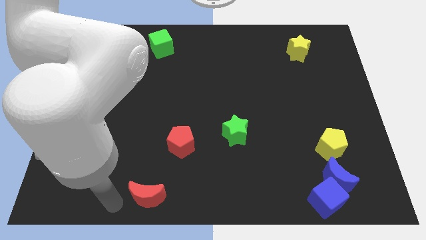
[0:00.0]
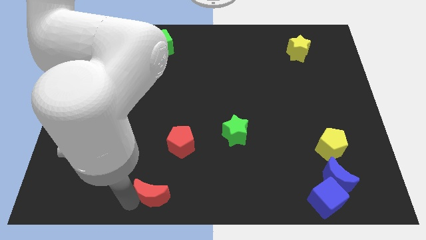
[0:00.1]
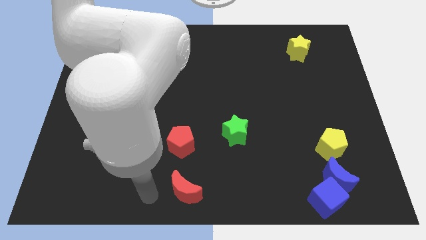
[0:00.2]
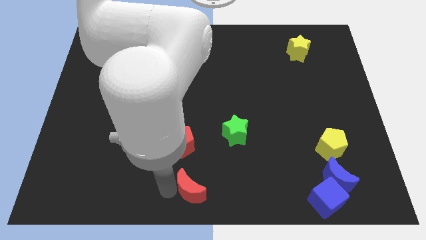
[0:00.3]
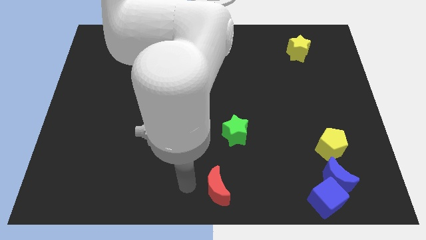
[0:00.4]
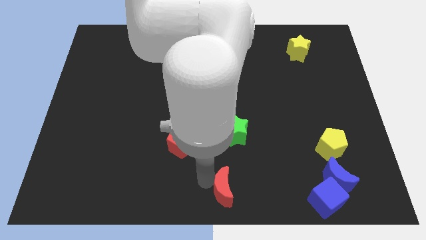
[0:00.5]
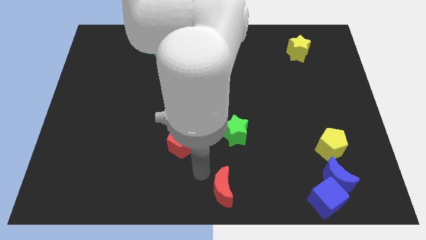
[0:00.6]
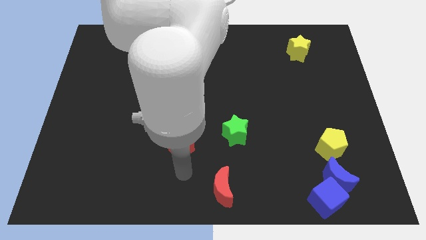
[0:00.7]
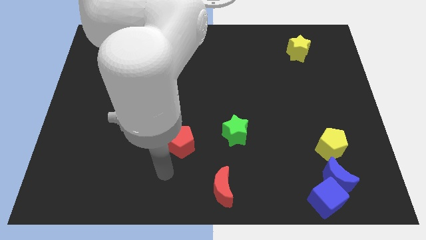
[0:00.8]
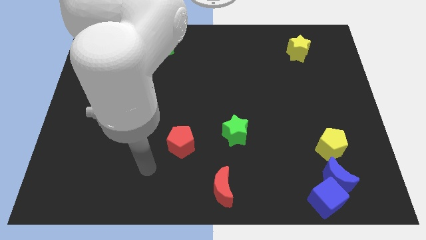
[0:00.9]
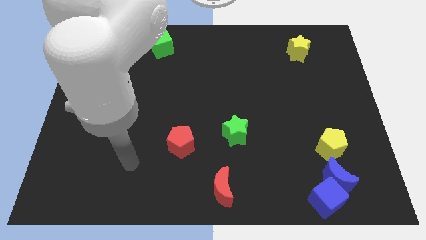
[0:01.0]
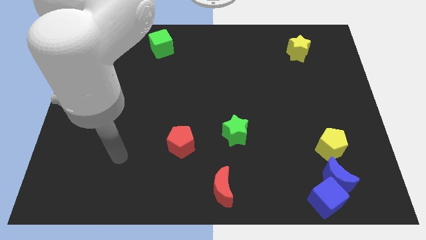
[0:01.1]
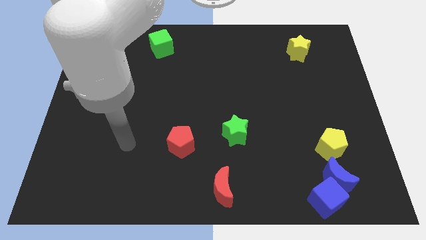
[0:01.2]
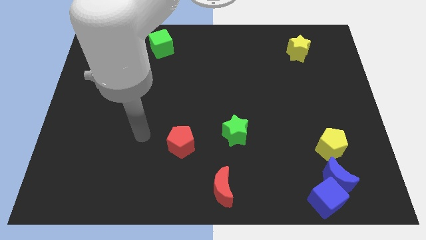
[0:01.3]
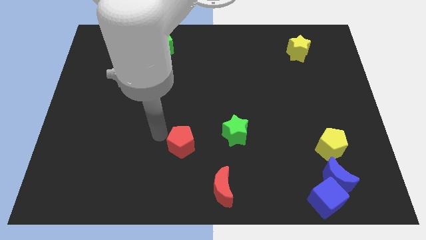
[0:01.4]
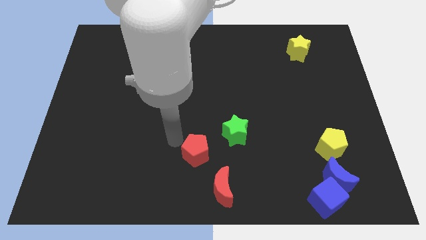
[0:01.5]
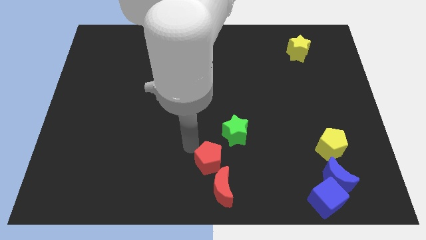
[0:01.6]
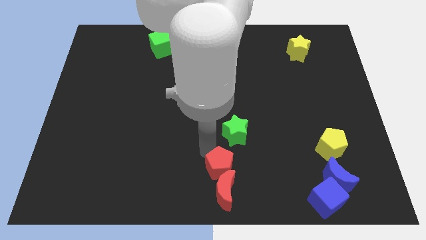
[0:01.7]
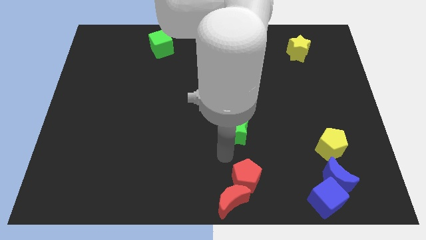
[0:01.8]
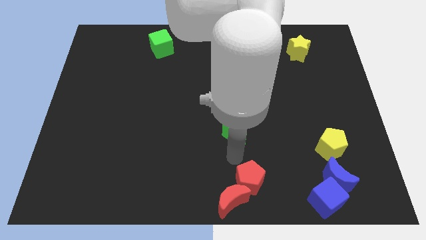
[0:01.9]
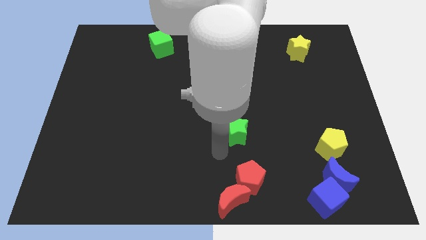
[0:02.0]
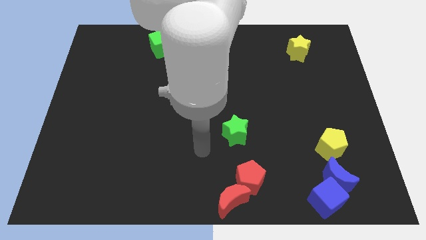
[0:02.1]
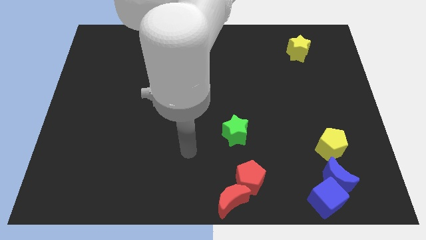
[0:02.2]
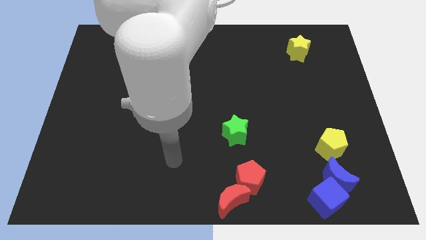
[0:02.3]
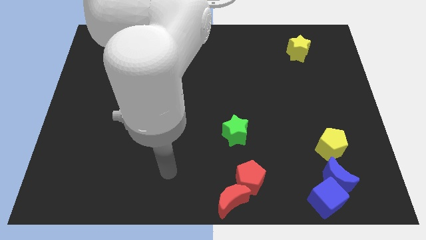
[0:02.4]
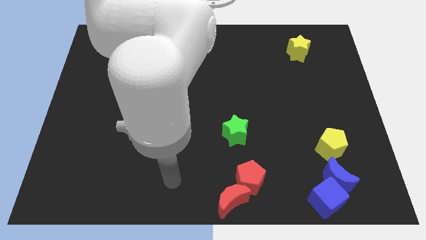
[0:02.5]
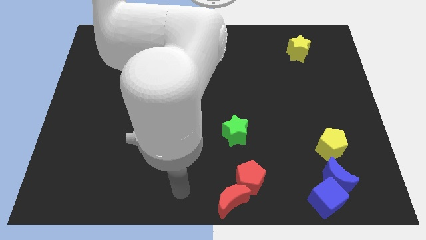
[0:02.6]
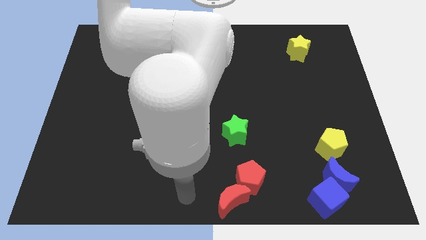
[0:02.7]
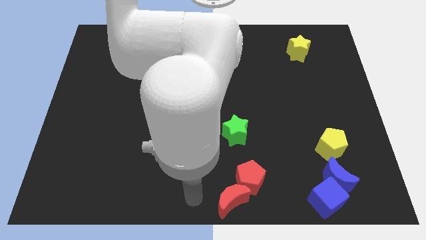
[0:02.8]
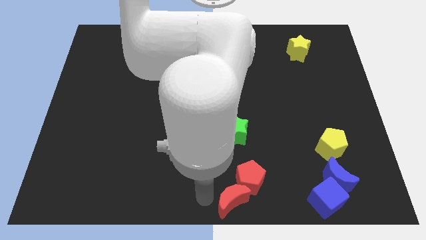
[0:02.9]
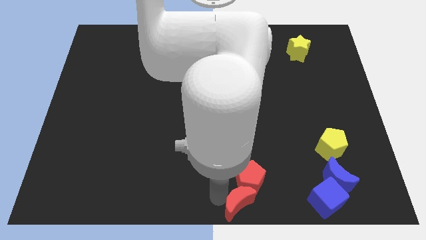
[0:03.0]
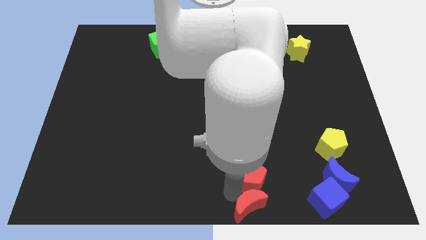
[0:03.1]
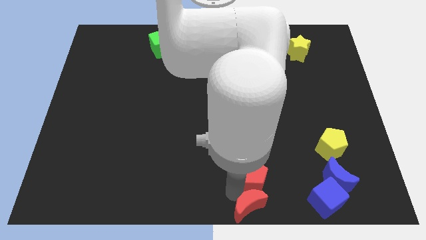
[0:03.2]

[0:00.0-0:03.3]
push red pentagon into the red moon

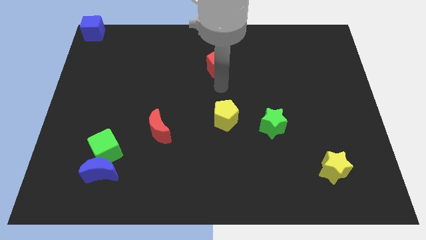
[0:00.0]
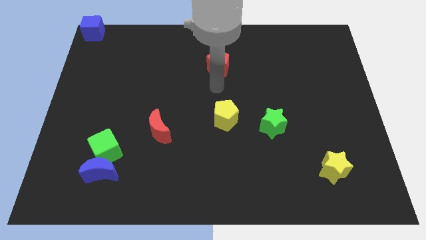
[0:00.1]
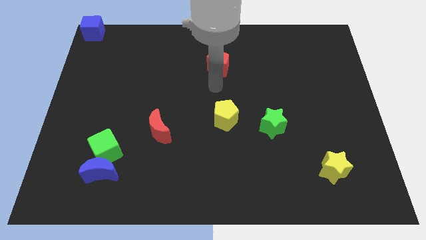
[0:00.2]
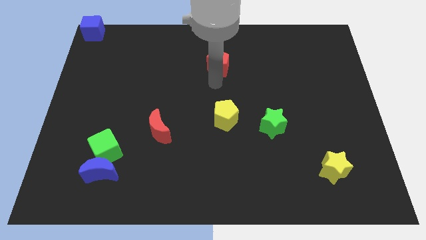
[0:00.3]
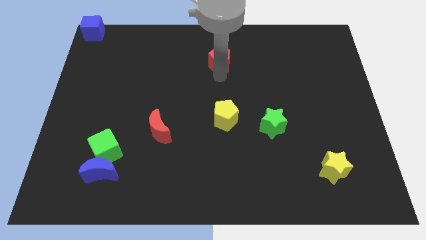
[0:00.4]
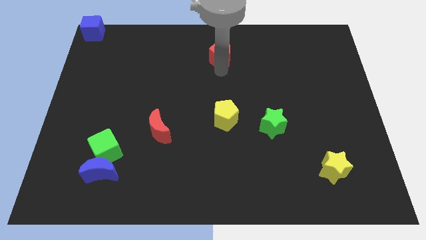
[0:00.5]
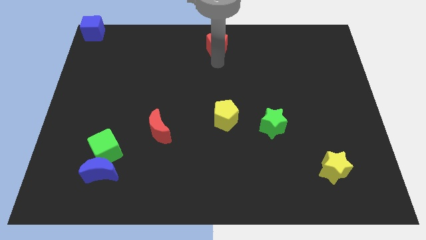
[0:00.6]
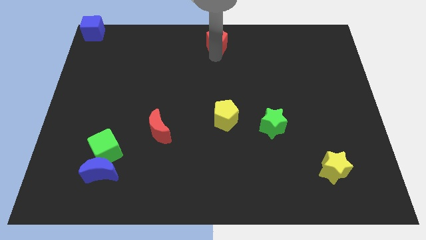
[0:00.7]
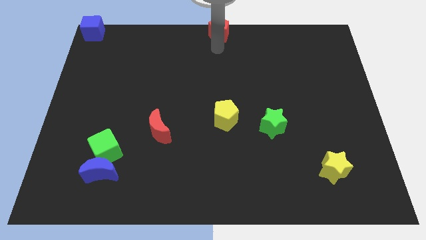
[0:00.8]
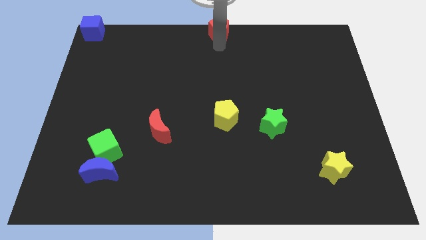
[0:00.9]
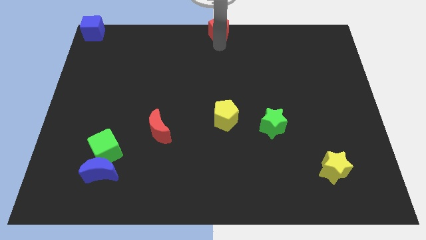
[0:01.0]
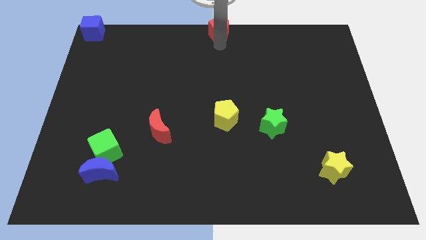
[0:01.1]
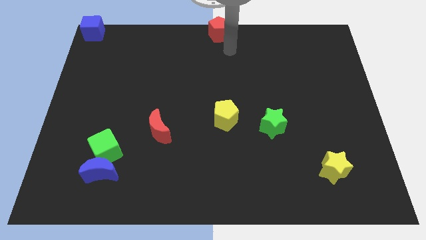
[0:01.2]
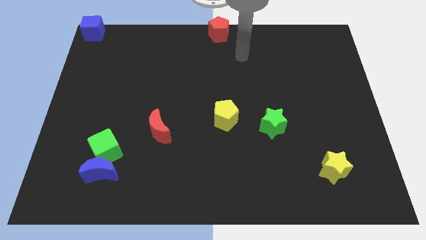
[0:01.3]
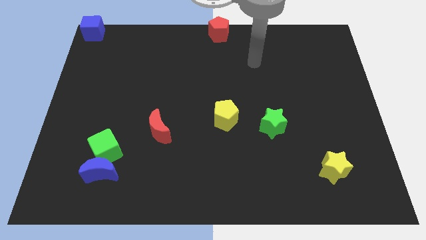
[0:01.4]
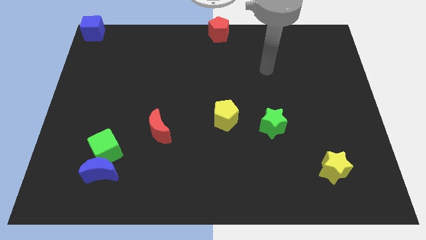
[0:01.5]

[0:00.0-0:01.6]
place the red pentagon at the top center of the board

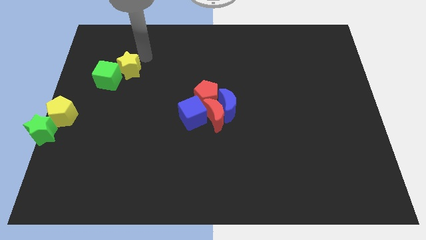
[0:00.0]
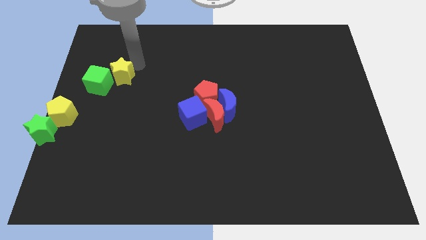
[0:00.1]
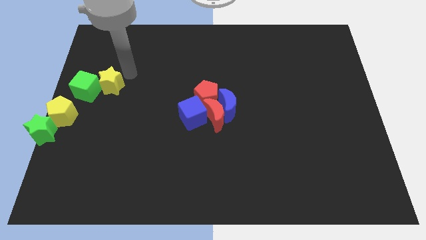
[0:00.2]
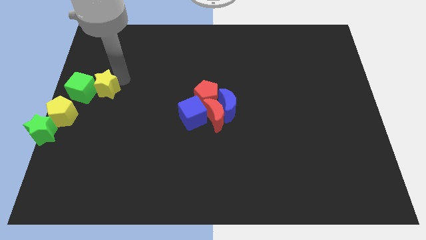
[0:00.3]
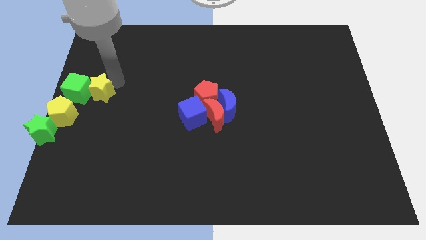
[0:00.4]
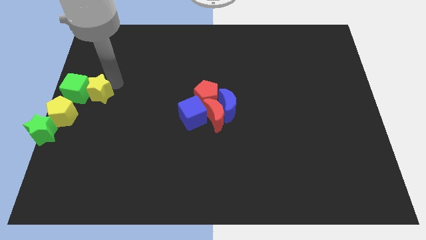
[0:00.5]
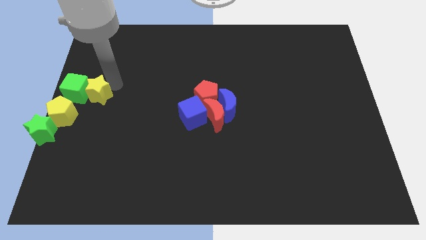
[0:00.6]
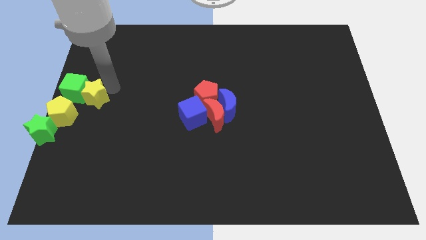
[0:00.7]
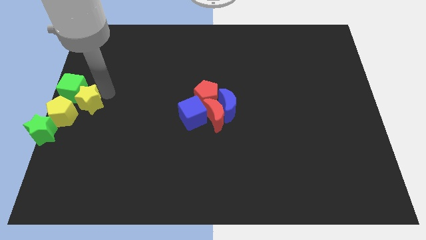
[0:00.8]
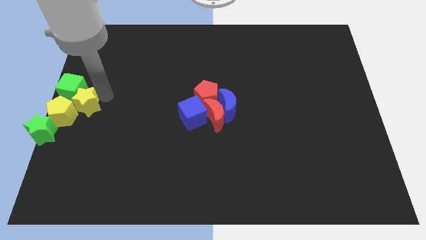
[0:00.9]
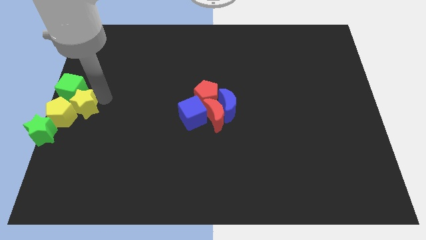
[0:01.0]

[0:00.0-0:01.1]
place the green cube with the yellow star at the center left

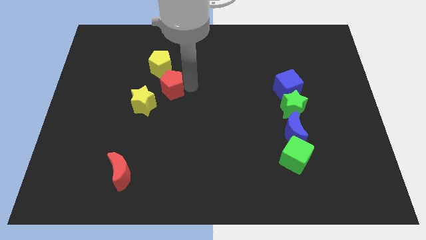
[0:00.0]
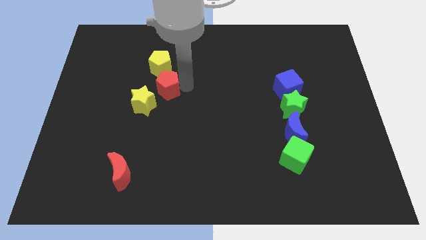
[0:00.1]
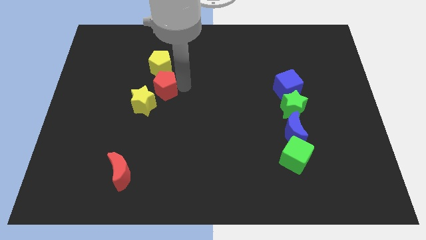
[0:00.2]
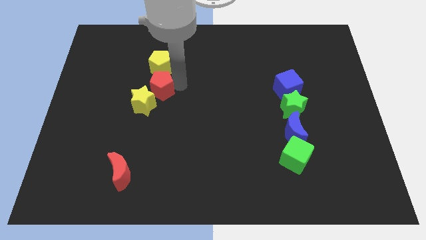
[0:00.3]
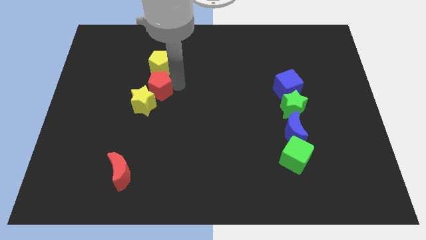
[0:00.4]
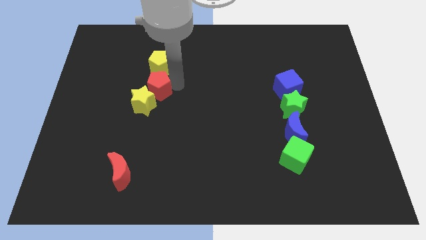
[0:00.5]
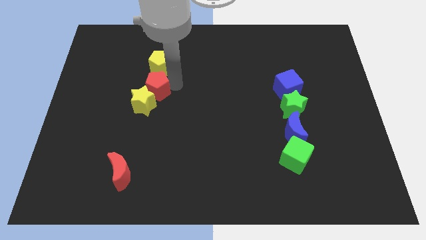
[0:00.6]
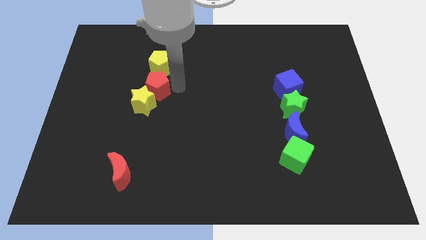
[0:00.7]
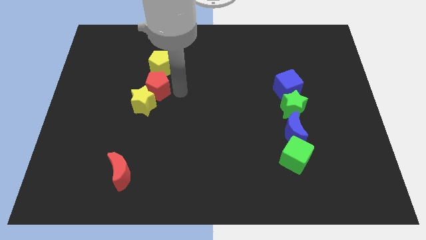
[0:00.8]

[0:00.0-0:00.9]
move red pentagon above the yellow star

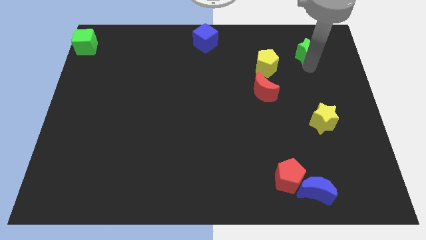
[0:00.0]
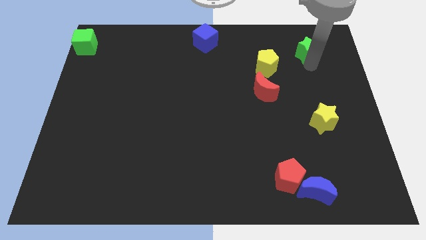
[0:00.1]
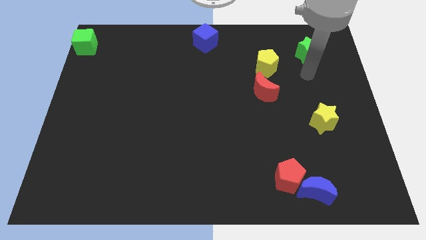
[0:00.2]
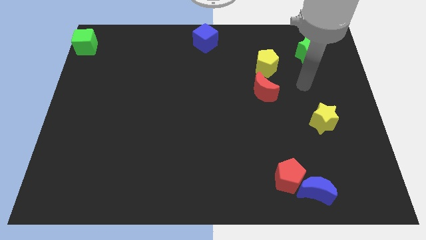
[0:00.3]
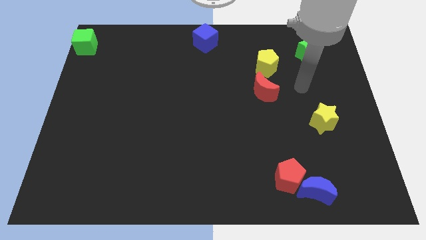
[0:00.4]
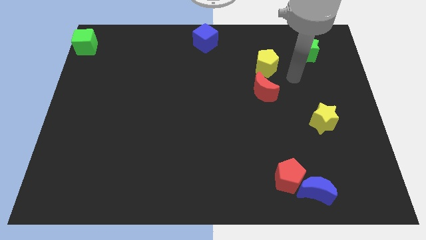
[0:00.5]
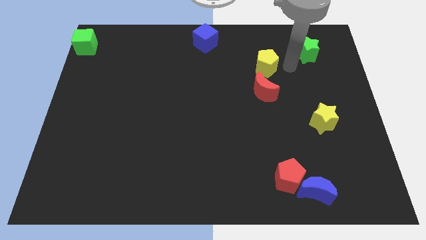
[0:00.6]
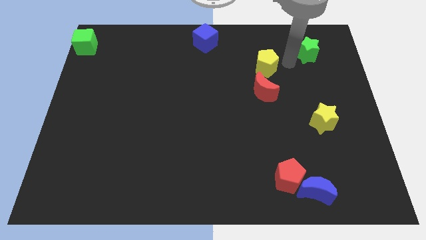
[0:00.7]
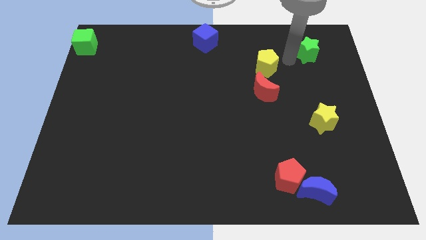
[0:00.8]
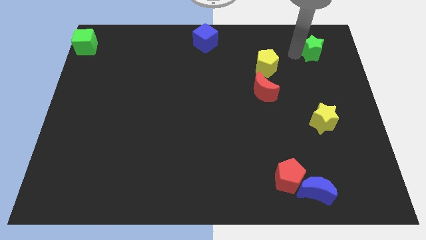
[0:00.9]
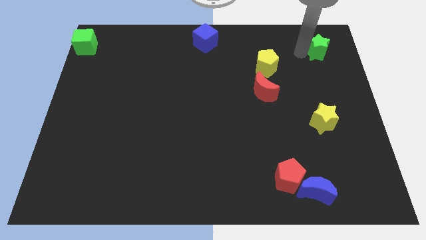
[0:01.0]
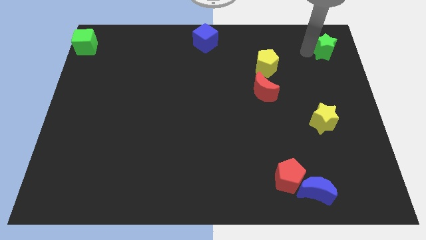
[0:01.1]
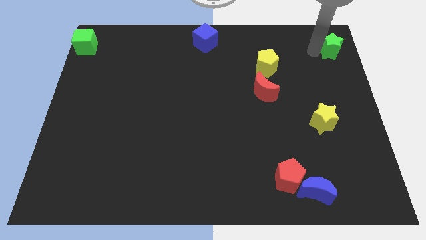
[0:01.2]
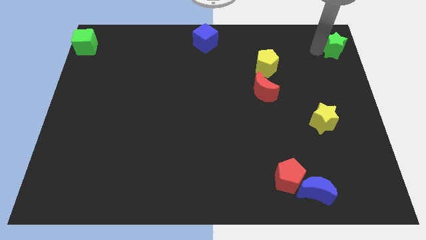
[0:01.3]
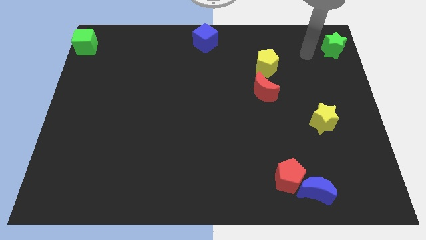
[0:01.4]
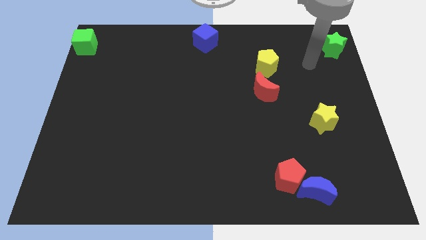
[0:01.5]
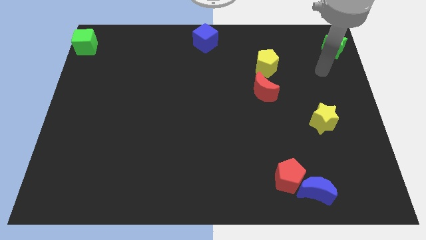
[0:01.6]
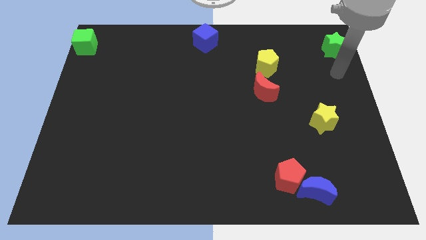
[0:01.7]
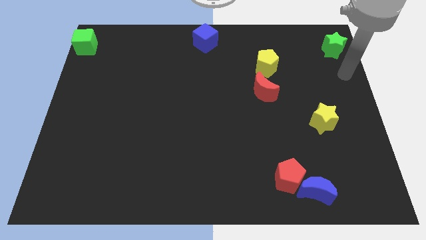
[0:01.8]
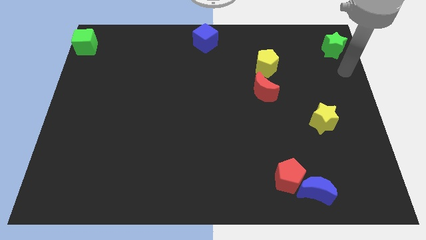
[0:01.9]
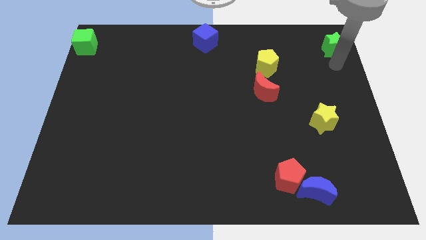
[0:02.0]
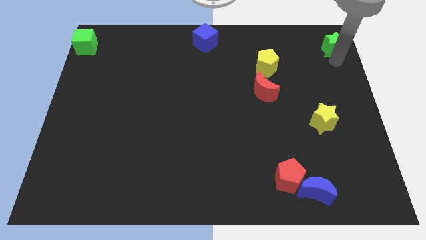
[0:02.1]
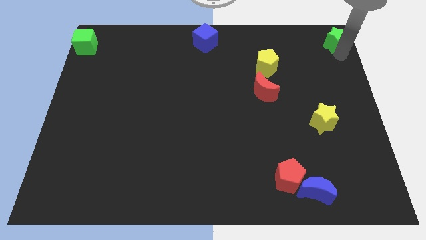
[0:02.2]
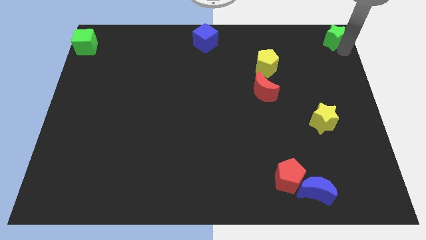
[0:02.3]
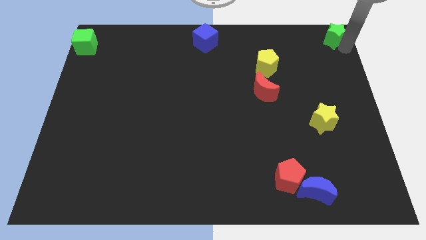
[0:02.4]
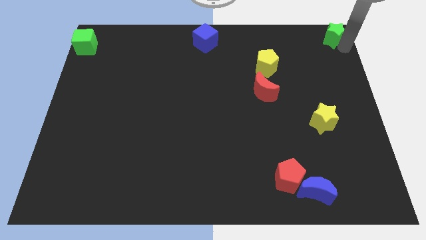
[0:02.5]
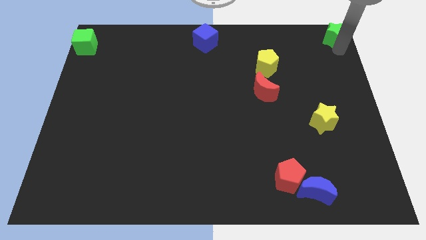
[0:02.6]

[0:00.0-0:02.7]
place green star to the top right corner of the board
